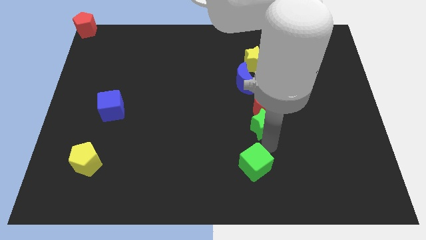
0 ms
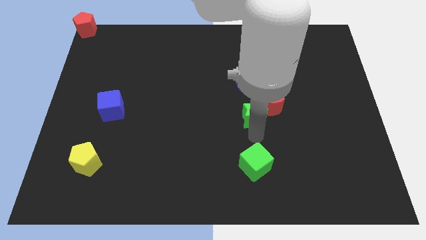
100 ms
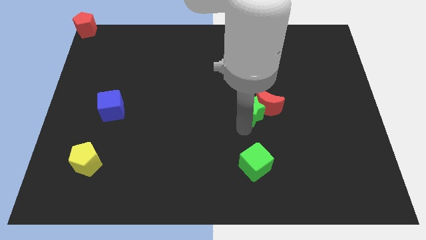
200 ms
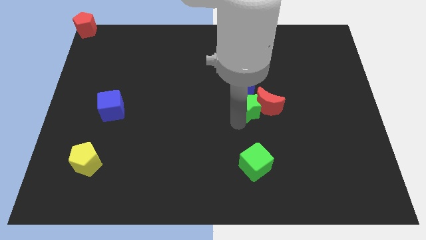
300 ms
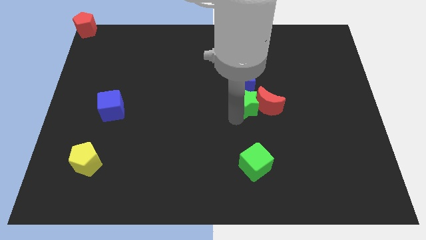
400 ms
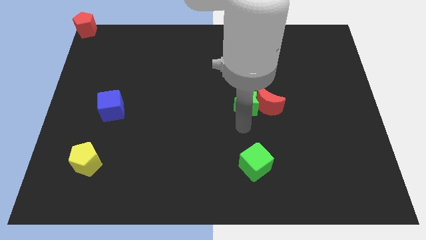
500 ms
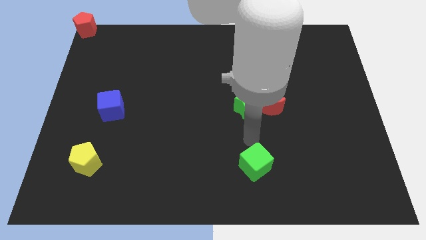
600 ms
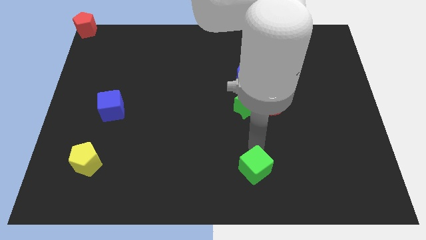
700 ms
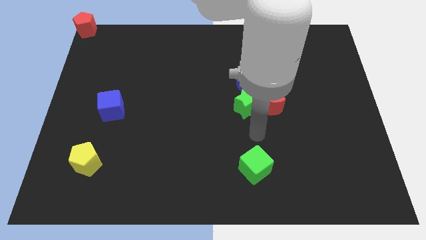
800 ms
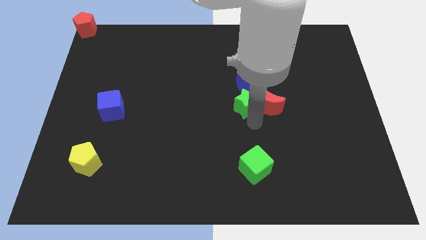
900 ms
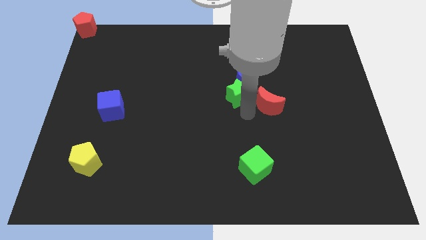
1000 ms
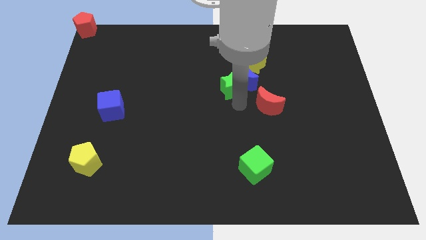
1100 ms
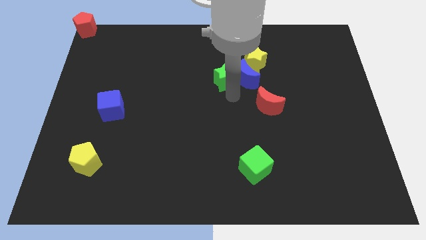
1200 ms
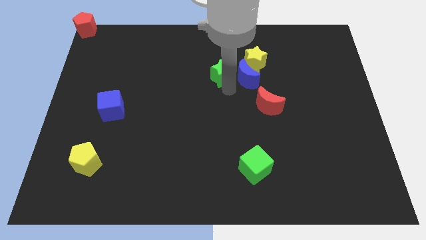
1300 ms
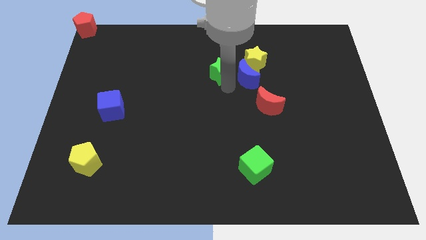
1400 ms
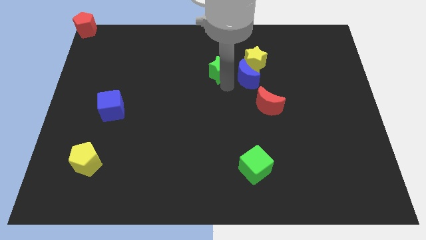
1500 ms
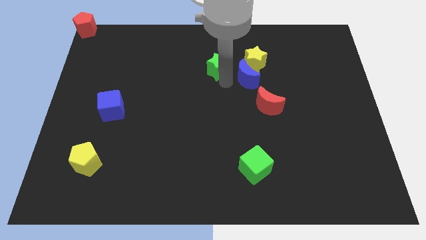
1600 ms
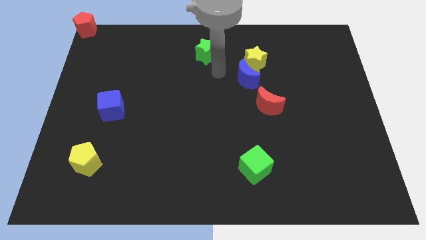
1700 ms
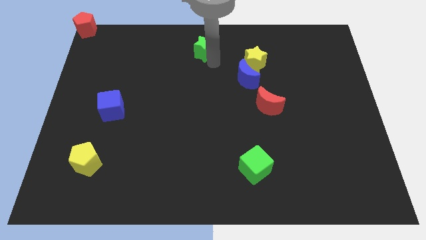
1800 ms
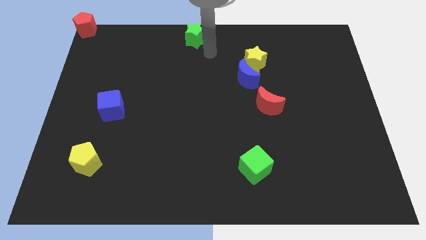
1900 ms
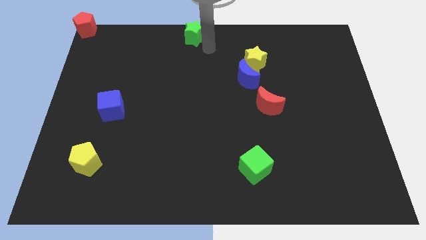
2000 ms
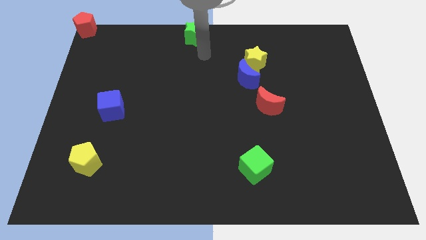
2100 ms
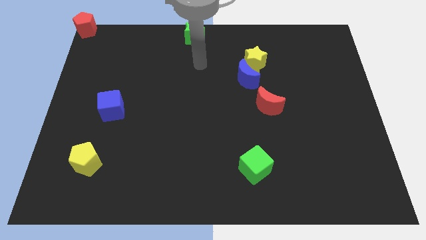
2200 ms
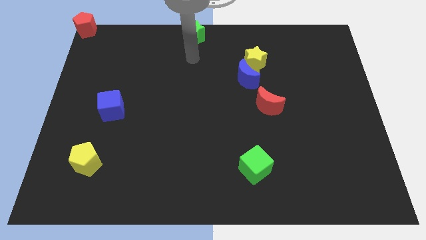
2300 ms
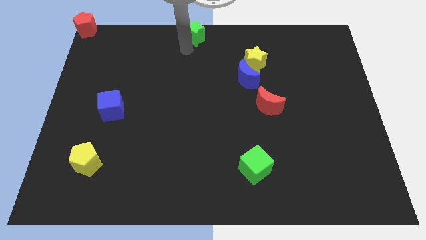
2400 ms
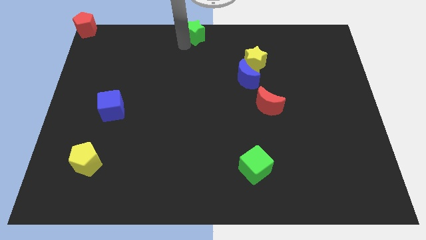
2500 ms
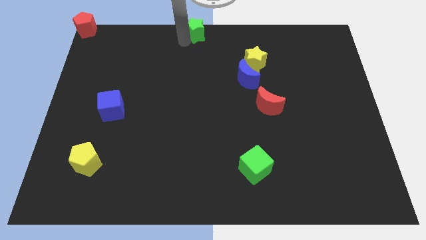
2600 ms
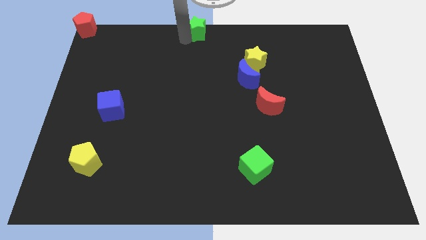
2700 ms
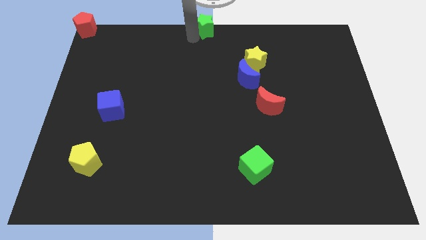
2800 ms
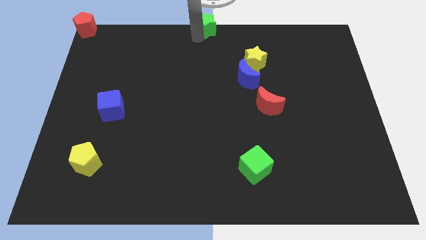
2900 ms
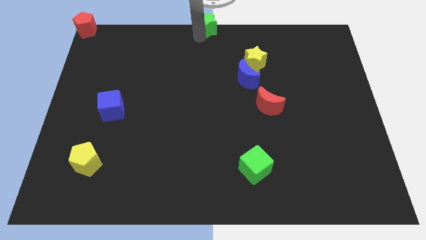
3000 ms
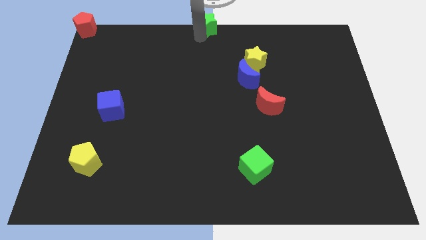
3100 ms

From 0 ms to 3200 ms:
put the green star at the top center of the board

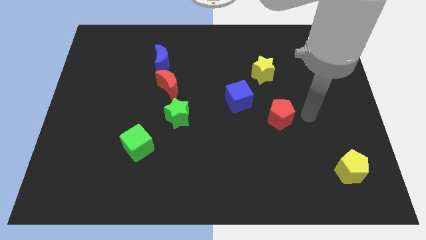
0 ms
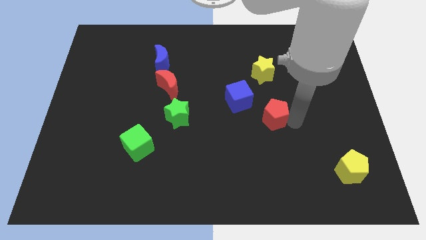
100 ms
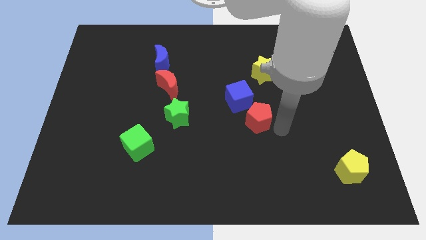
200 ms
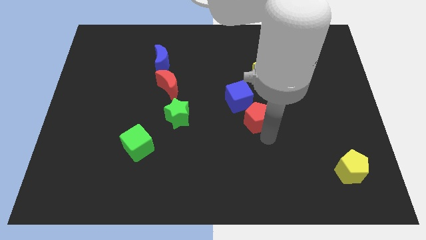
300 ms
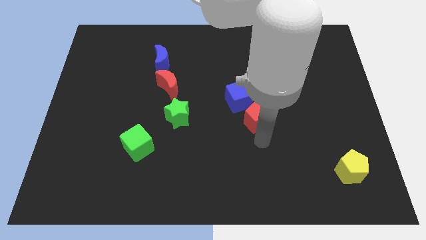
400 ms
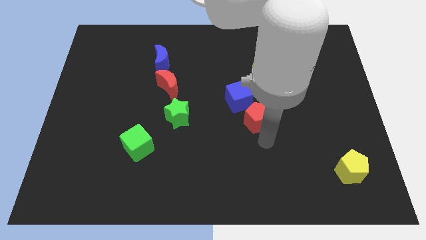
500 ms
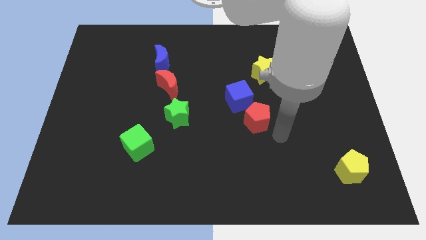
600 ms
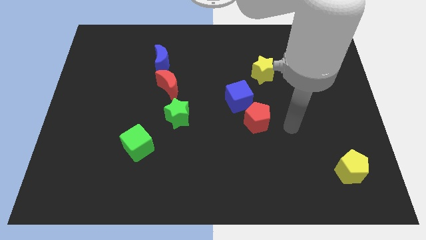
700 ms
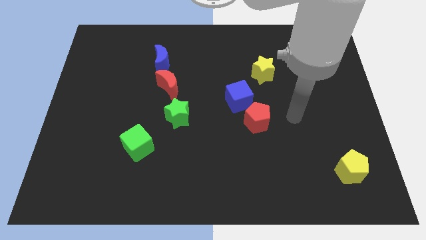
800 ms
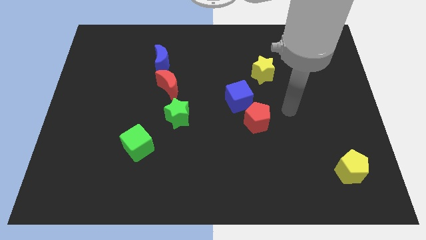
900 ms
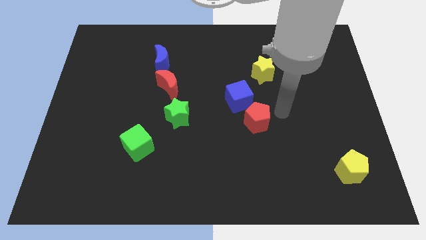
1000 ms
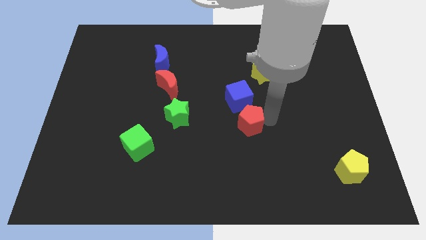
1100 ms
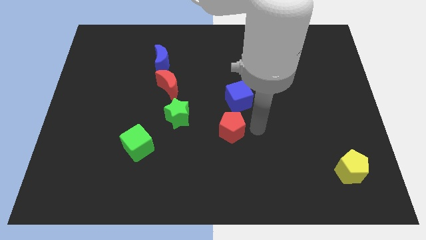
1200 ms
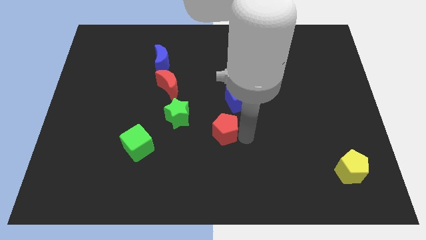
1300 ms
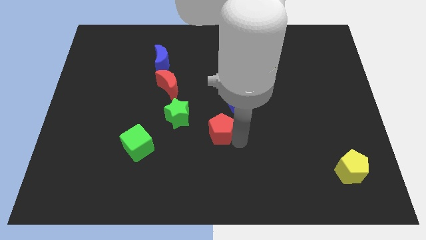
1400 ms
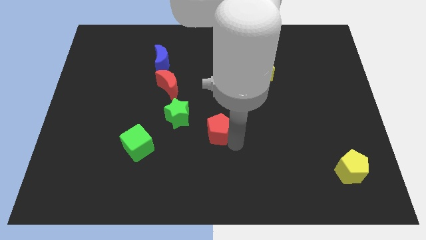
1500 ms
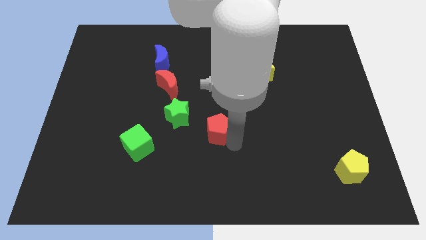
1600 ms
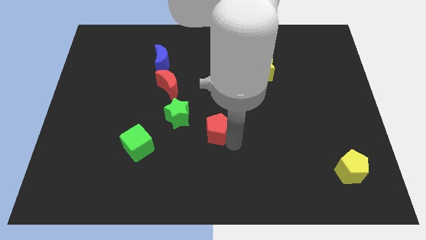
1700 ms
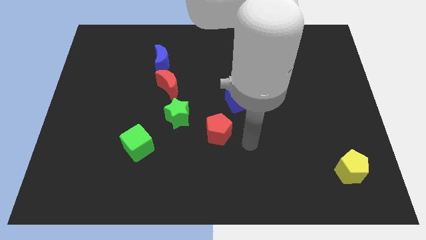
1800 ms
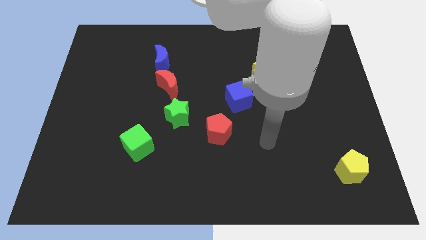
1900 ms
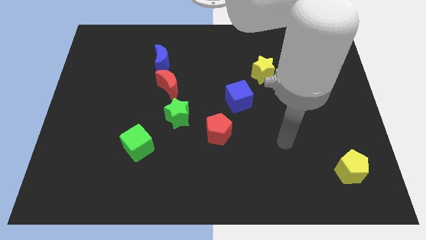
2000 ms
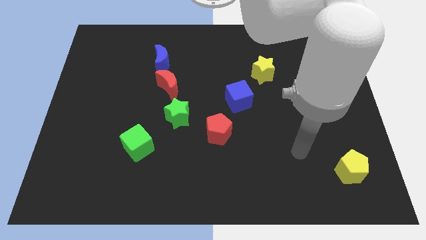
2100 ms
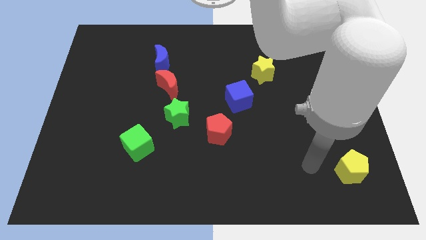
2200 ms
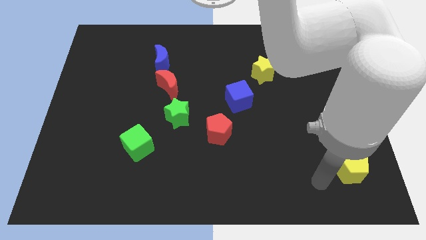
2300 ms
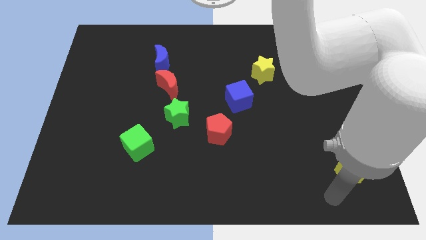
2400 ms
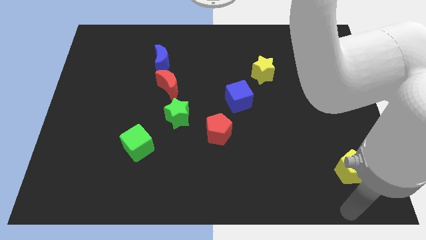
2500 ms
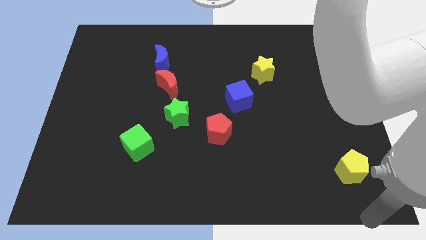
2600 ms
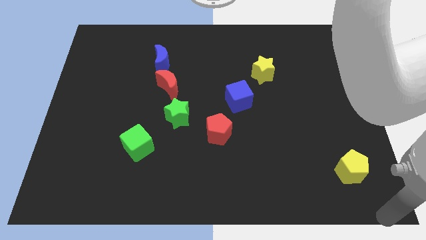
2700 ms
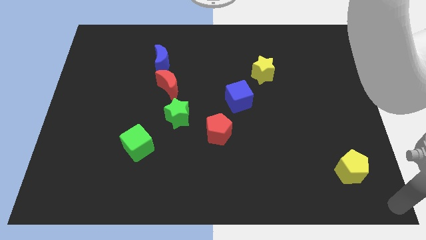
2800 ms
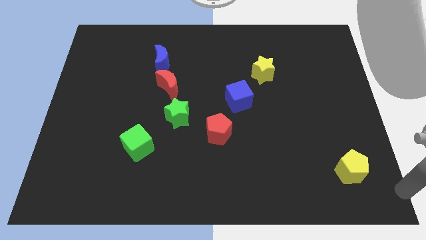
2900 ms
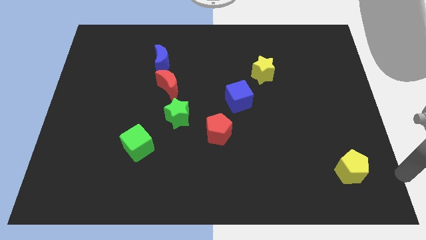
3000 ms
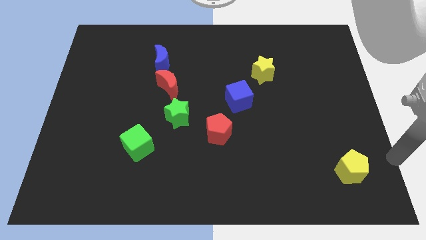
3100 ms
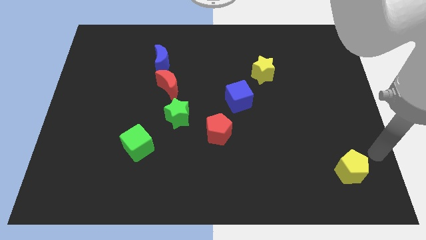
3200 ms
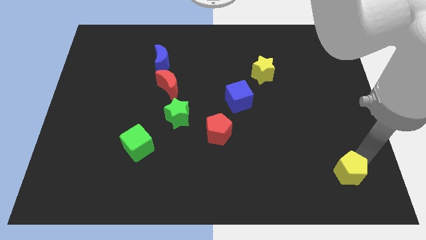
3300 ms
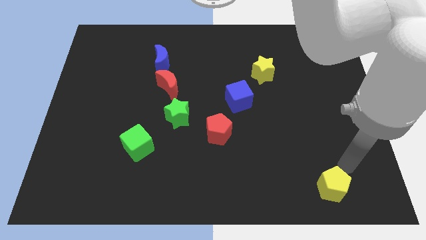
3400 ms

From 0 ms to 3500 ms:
place your arm near the yellow pentagon

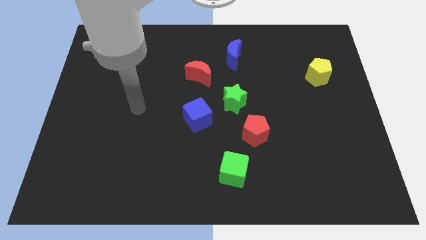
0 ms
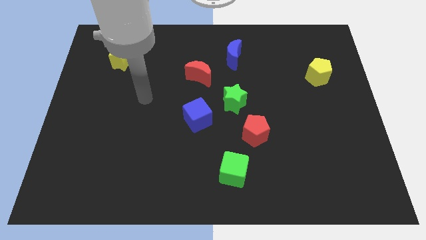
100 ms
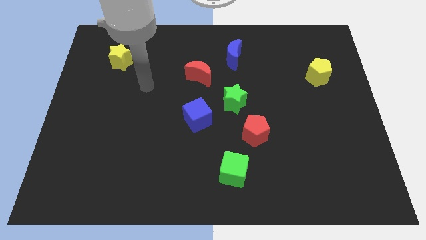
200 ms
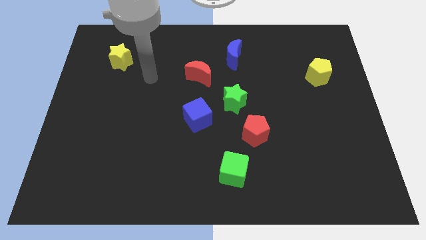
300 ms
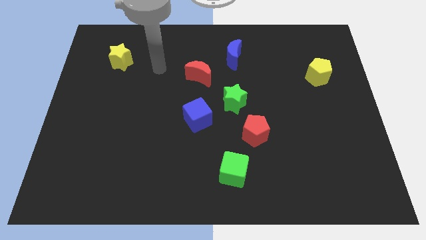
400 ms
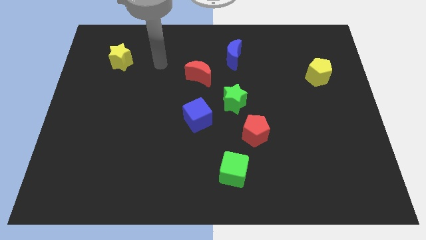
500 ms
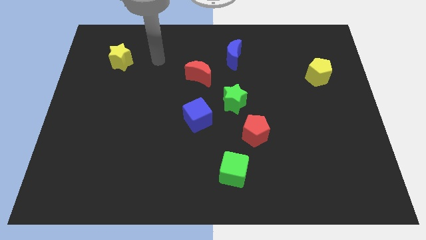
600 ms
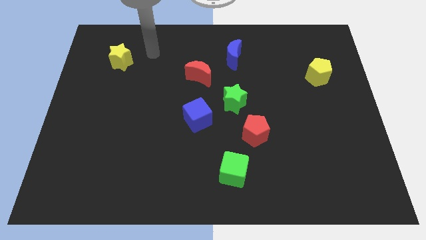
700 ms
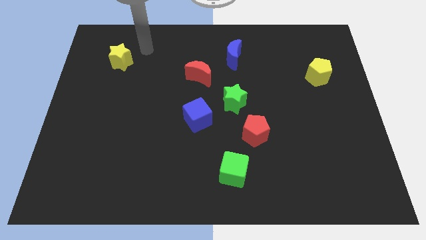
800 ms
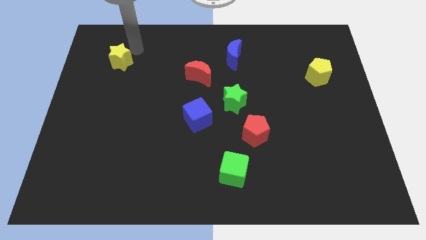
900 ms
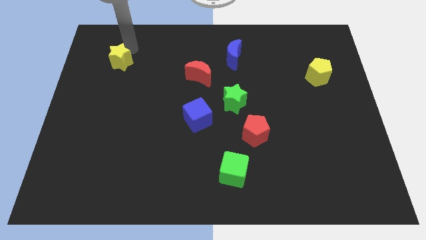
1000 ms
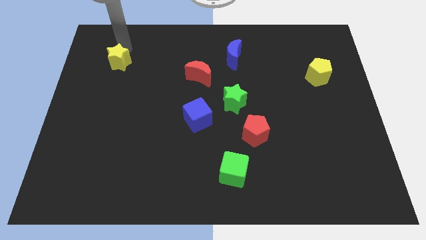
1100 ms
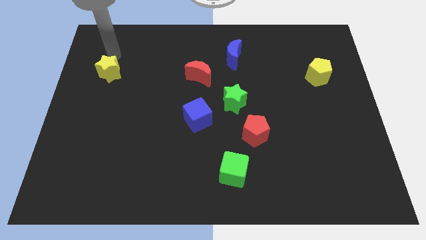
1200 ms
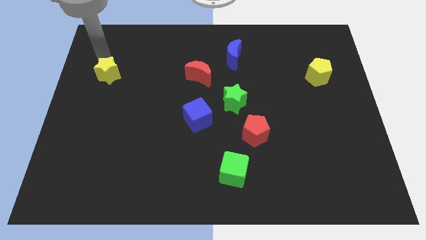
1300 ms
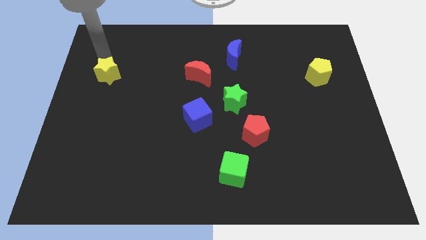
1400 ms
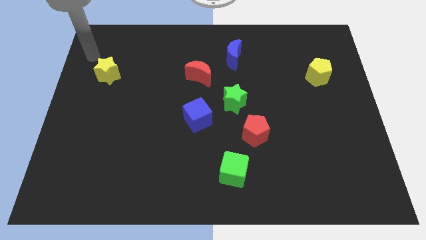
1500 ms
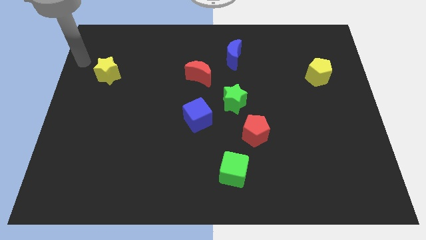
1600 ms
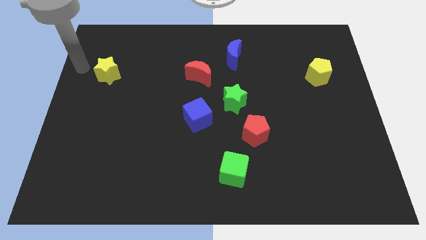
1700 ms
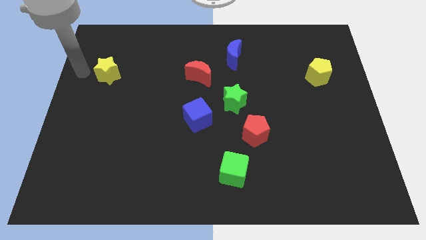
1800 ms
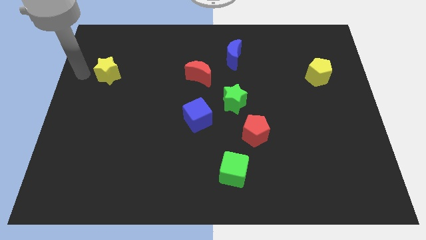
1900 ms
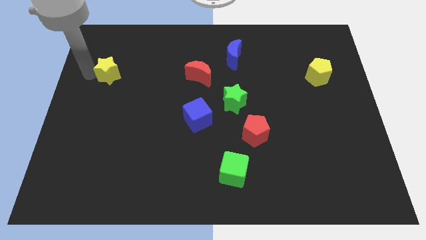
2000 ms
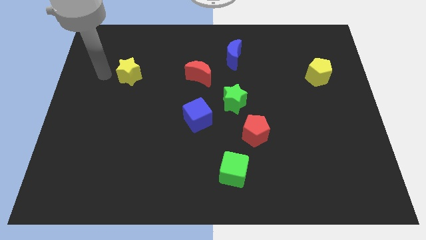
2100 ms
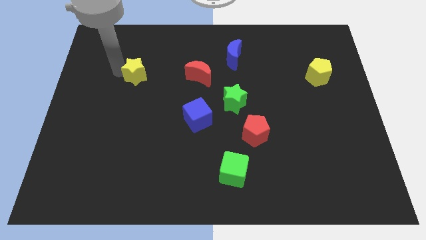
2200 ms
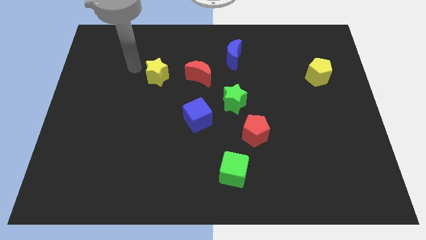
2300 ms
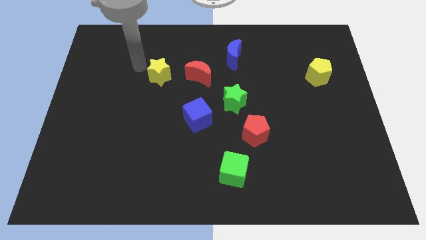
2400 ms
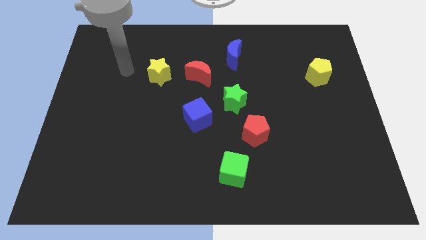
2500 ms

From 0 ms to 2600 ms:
move the yellow star to the left side of red moon
